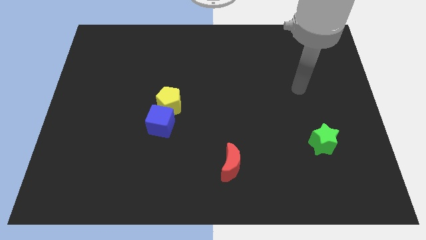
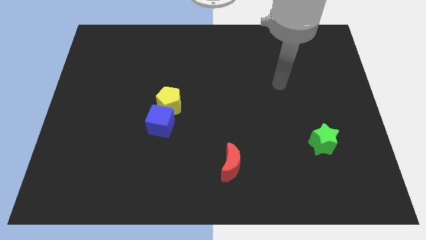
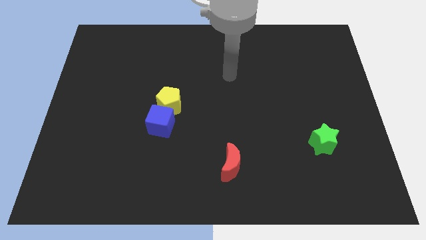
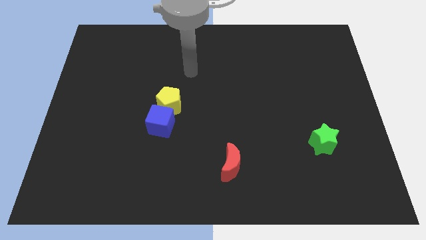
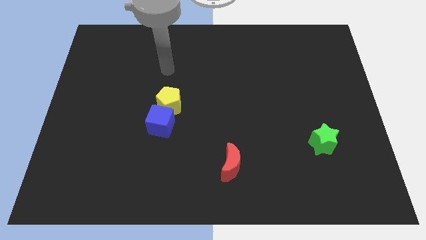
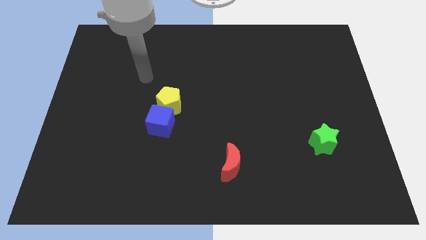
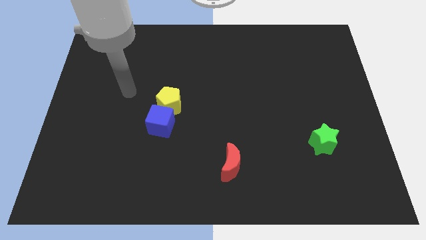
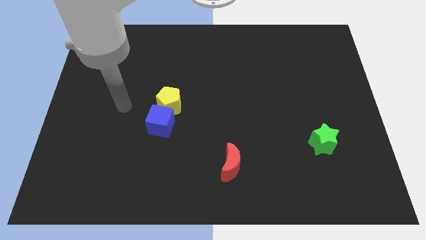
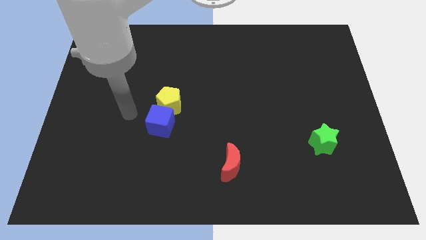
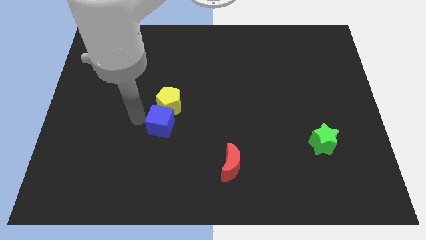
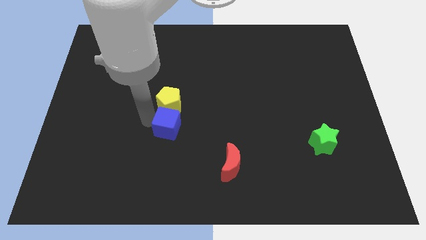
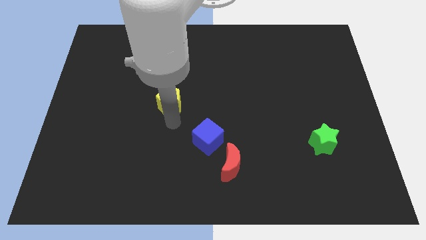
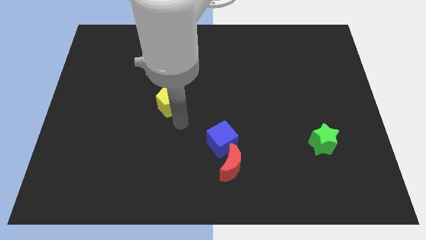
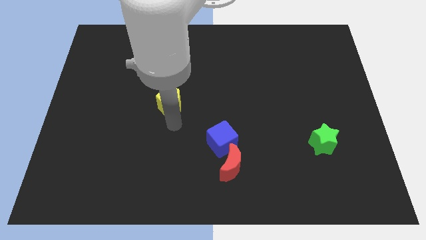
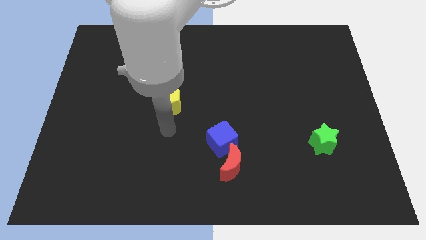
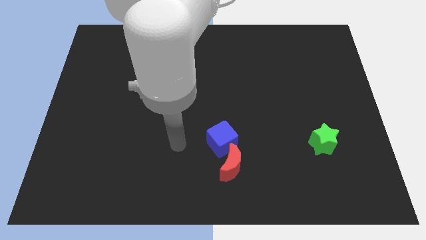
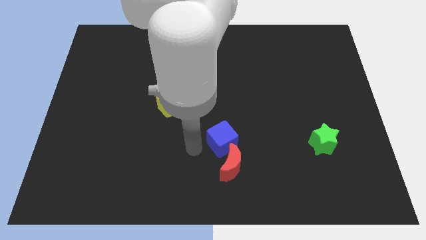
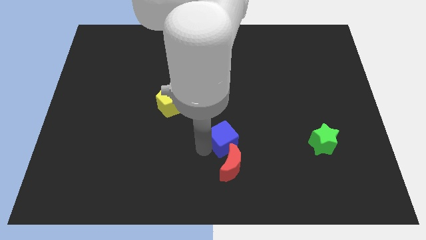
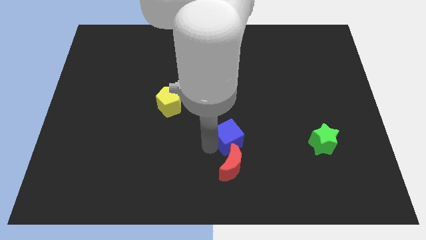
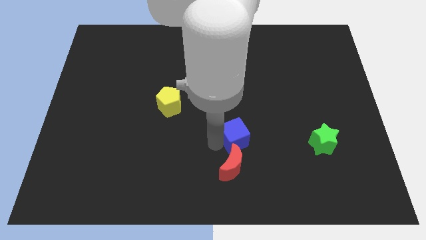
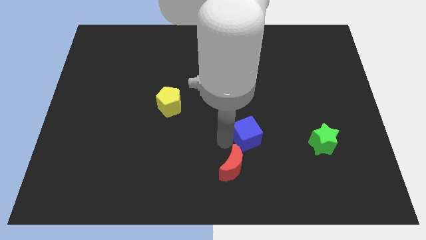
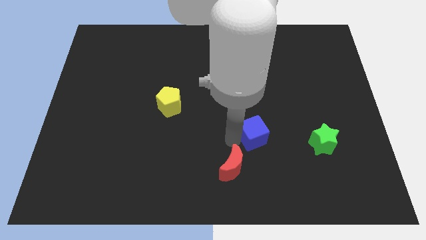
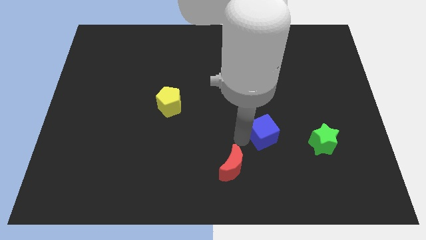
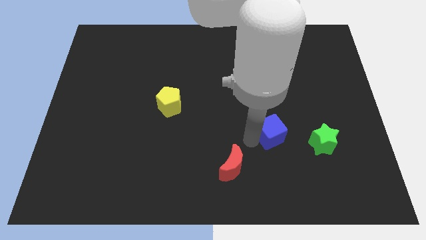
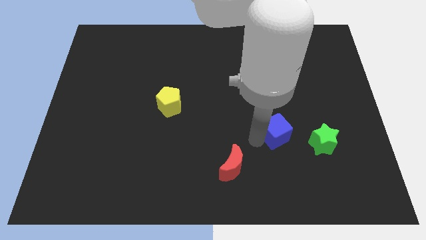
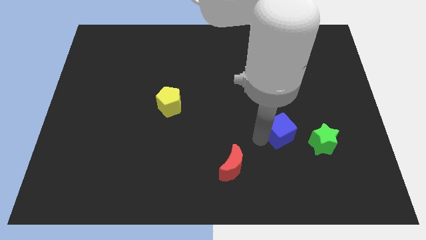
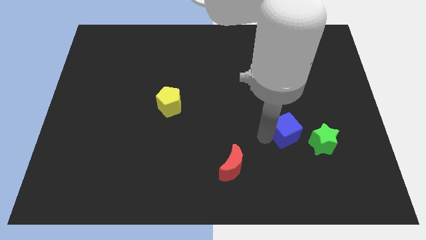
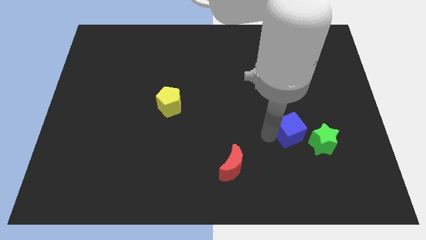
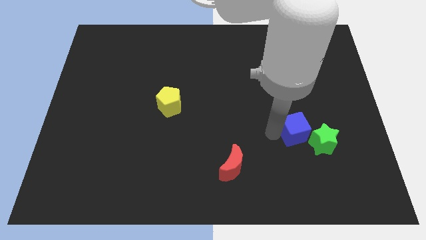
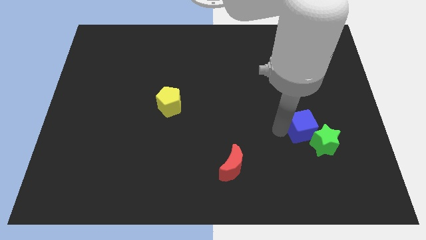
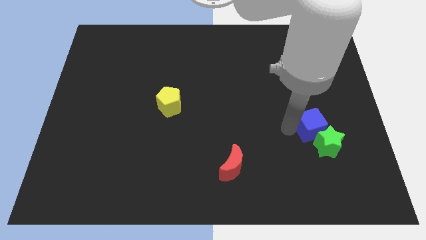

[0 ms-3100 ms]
move the blue cube towards the green star

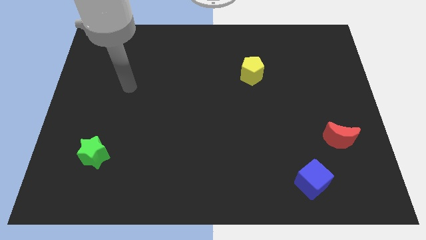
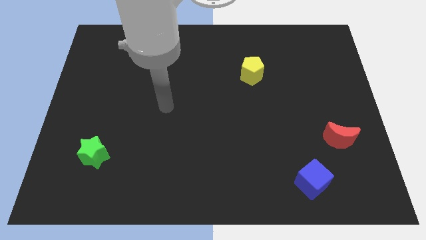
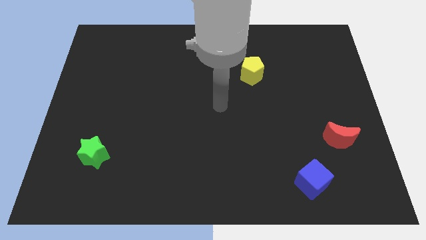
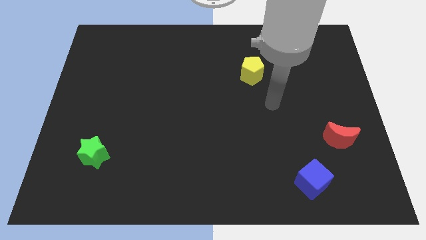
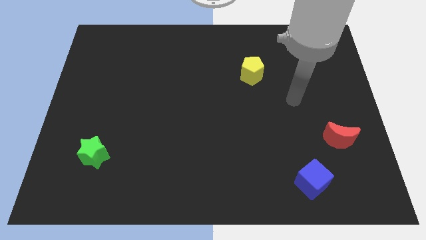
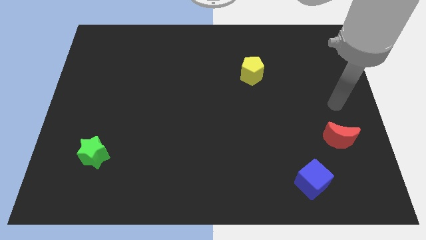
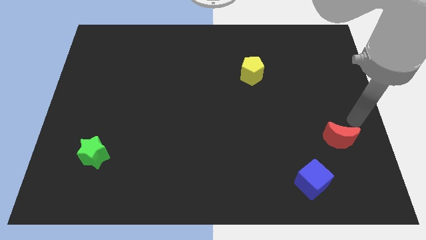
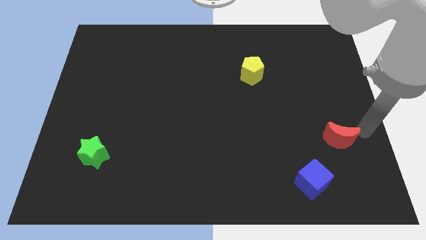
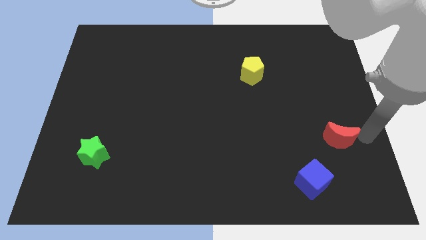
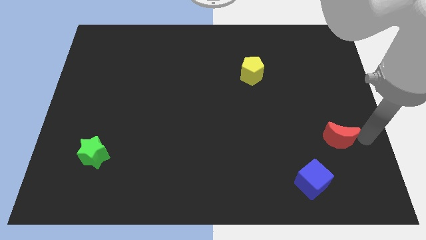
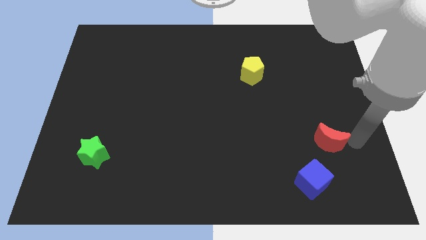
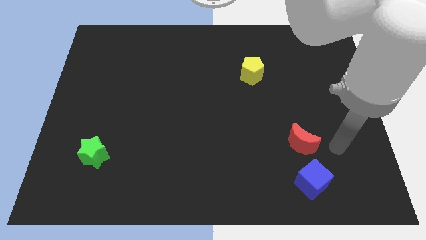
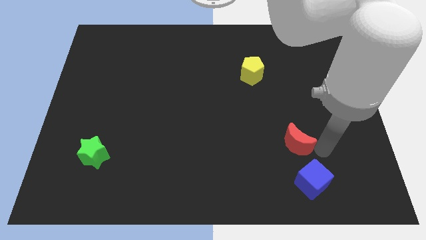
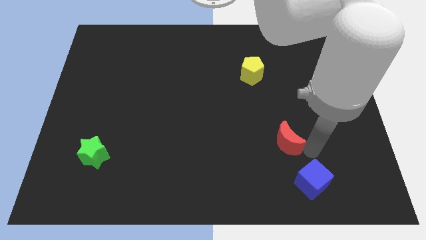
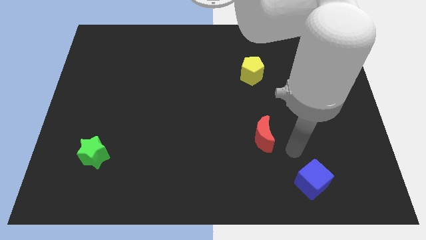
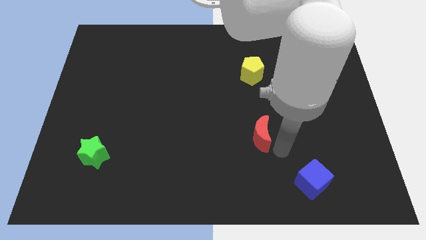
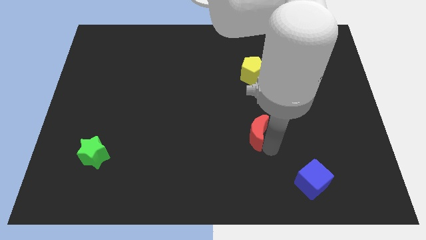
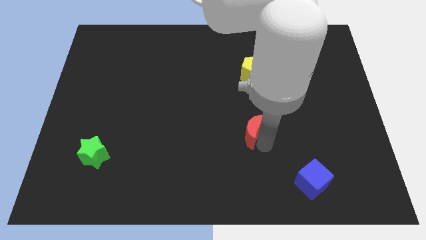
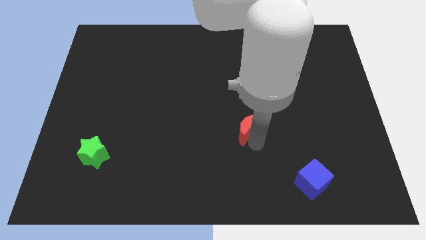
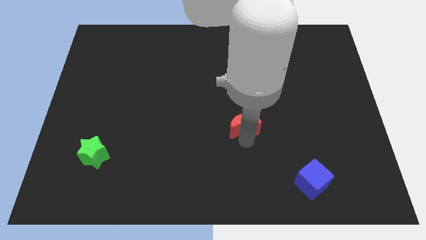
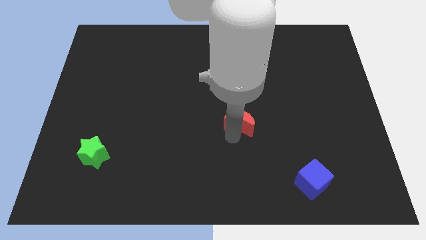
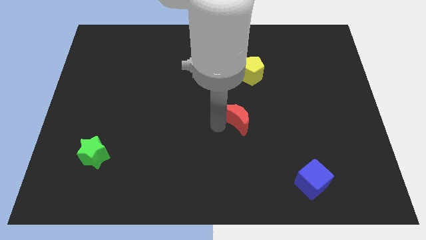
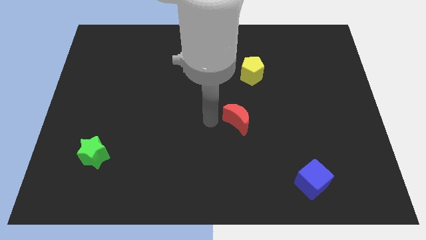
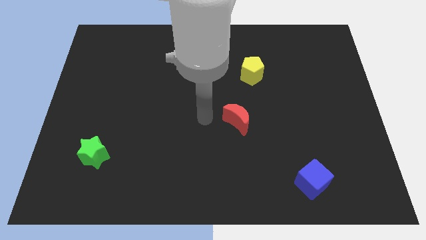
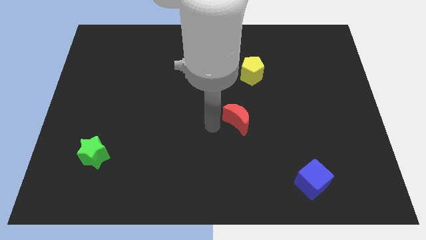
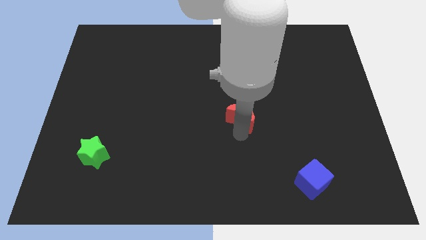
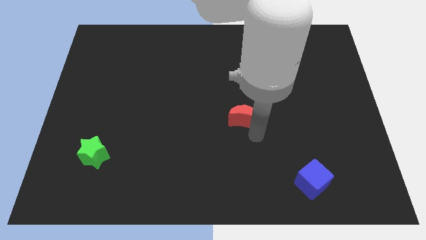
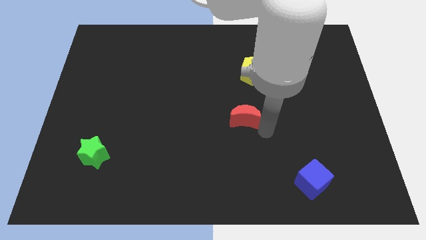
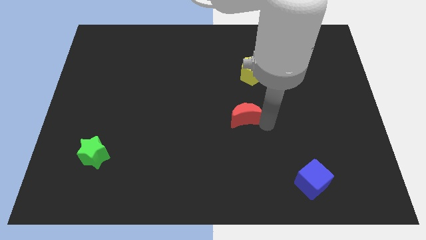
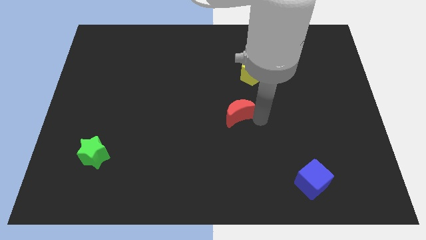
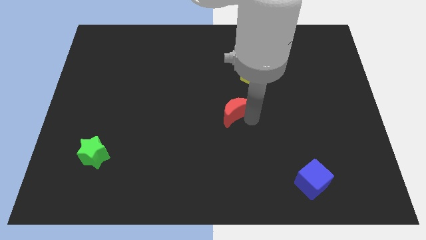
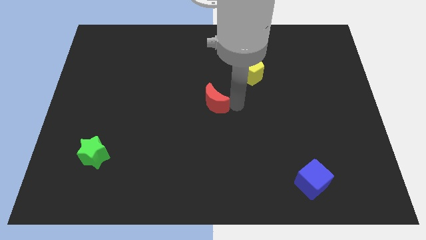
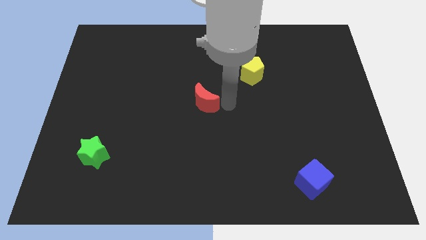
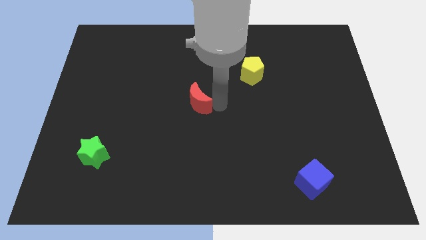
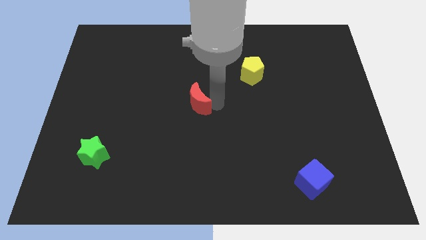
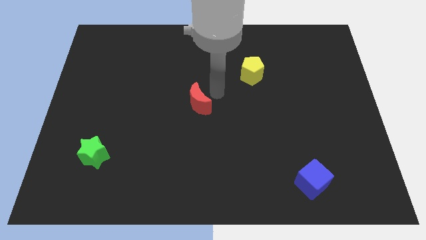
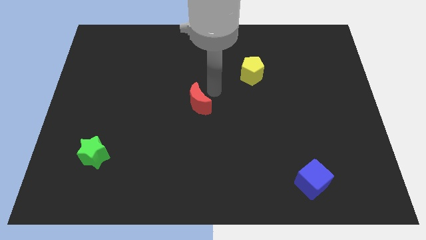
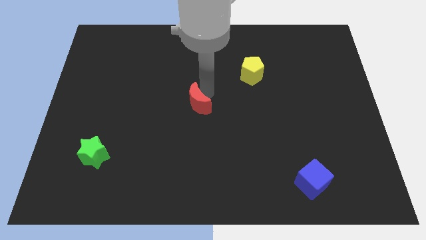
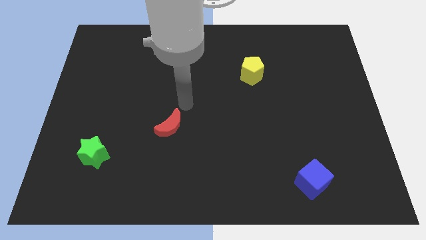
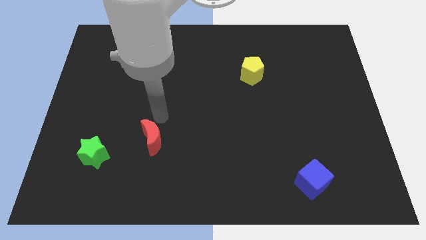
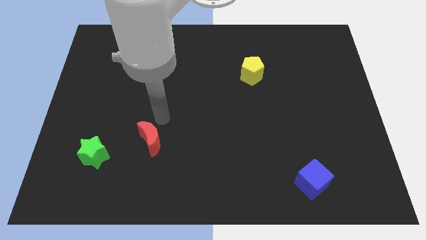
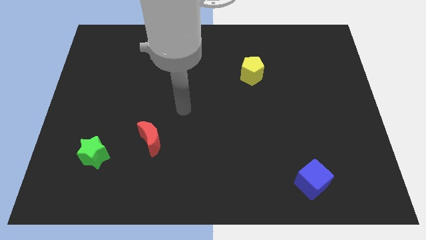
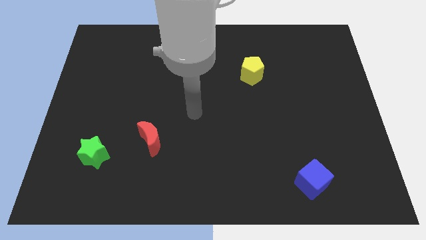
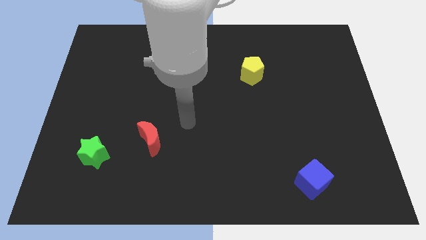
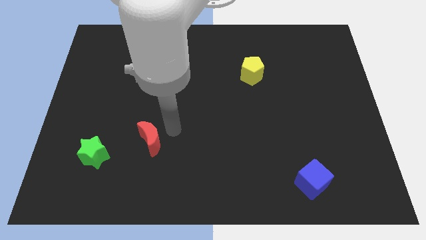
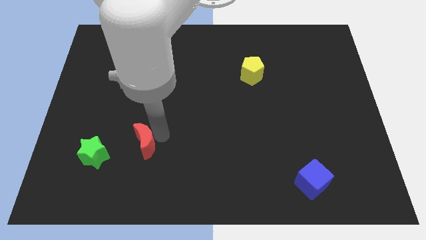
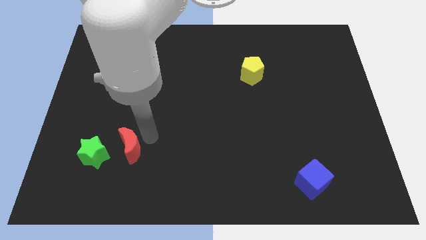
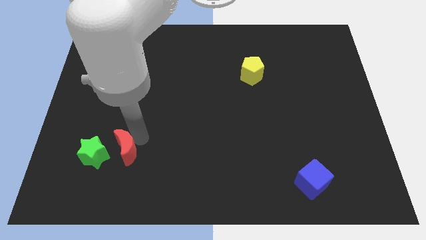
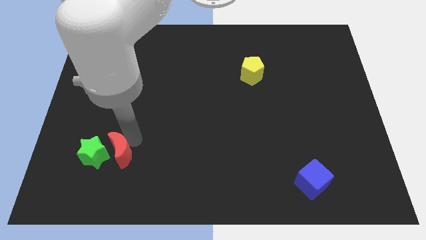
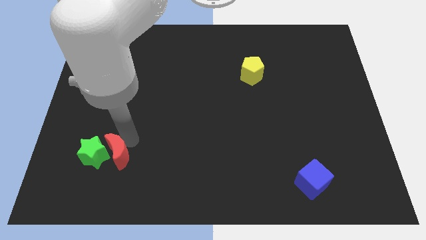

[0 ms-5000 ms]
slide the red moon close to the green block

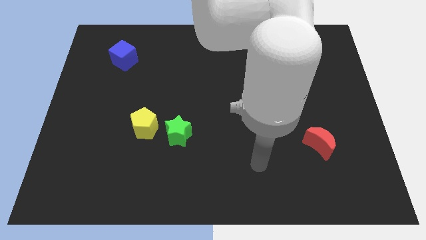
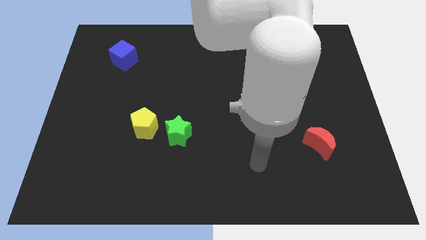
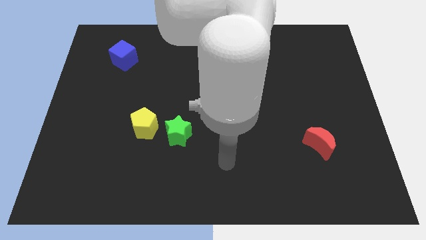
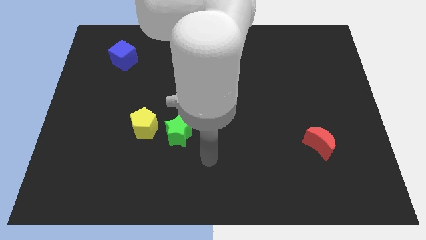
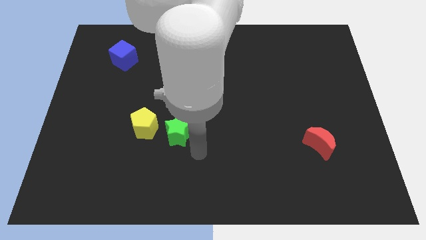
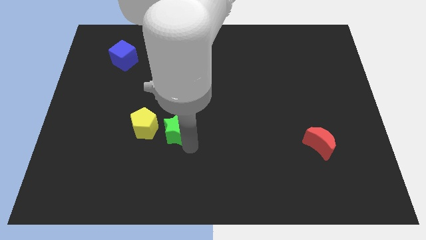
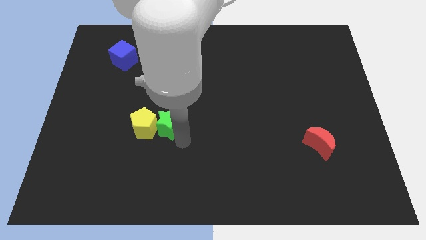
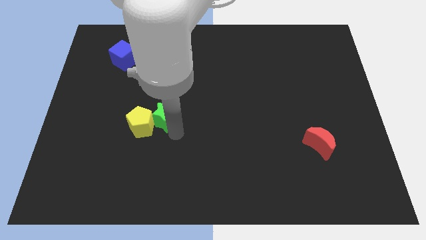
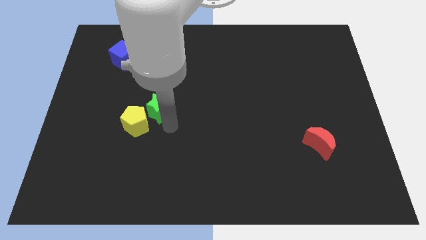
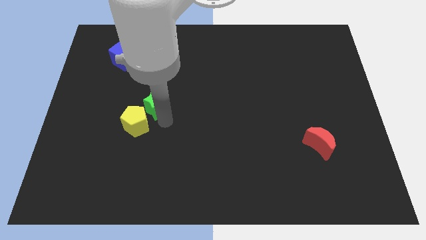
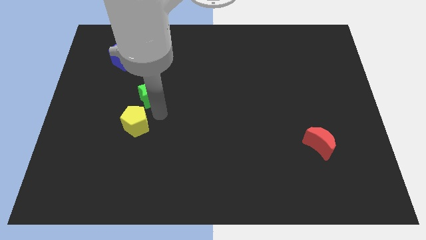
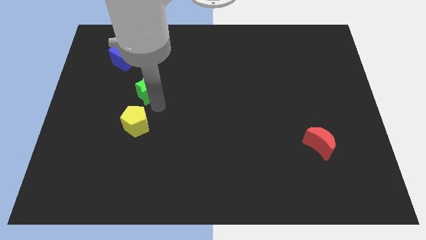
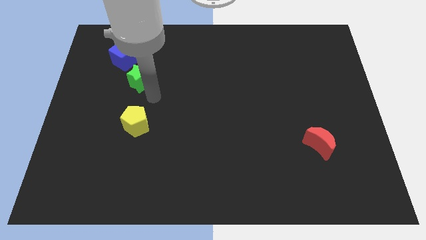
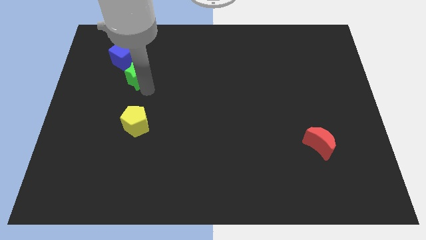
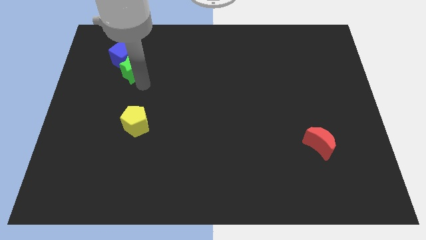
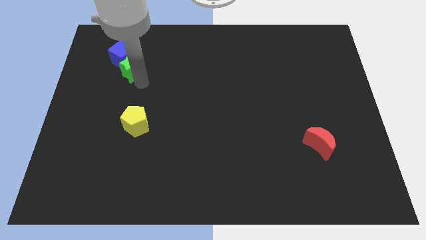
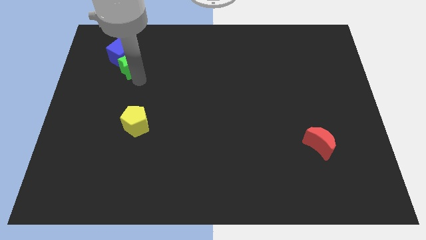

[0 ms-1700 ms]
move the star to the blue cube
